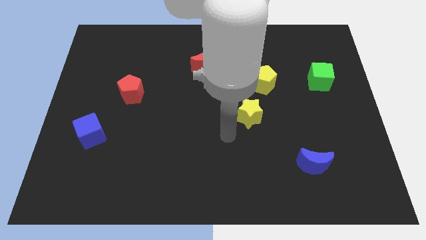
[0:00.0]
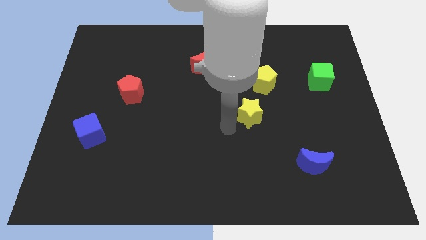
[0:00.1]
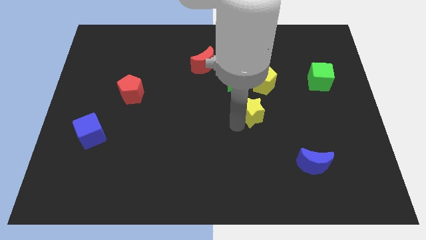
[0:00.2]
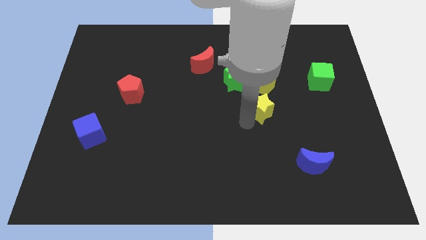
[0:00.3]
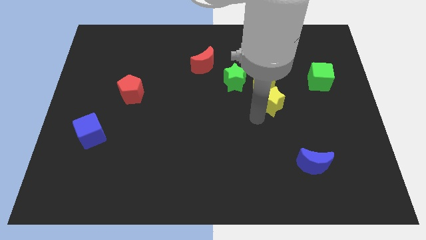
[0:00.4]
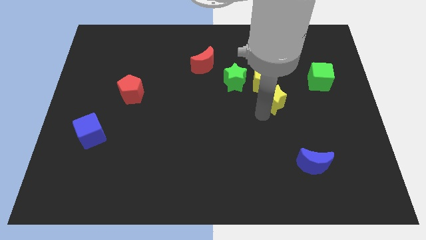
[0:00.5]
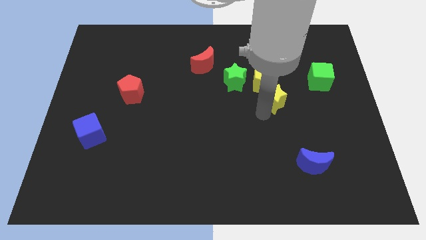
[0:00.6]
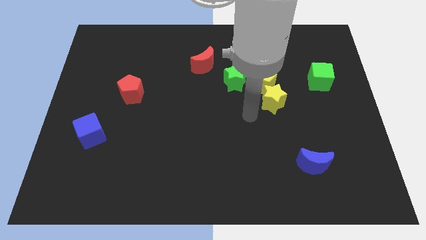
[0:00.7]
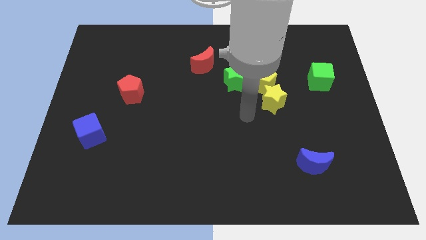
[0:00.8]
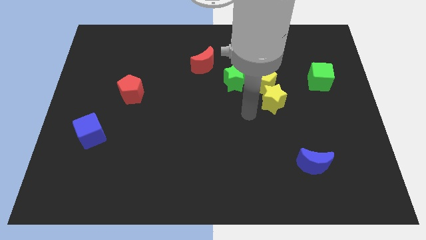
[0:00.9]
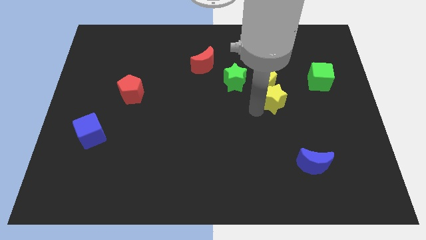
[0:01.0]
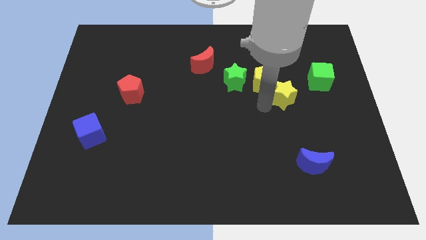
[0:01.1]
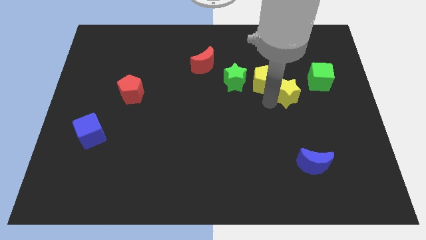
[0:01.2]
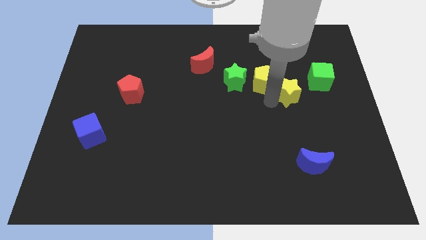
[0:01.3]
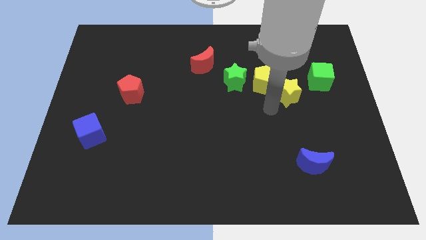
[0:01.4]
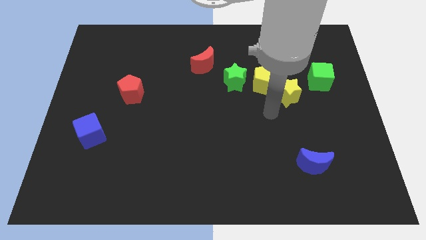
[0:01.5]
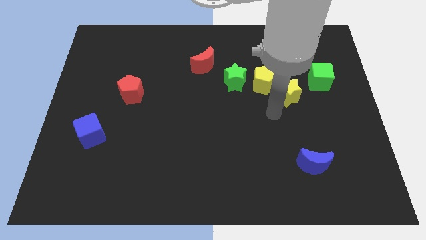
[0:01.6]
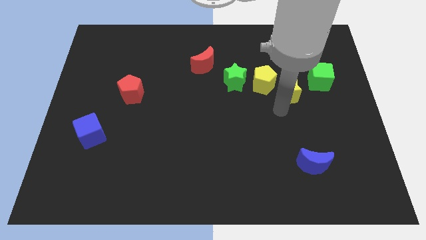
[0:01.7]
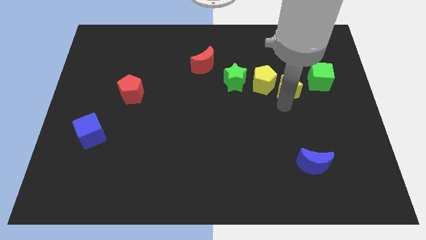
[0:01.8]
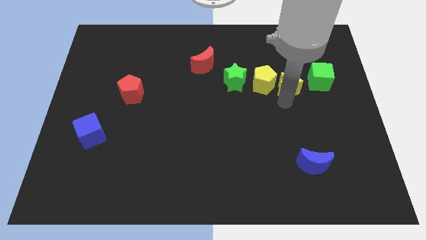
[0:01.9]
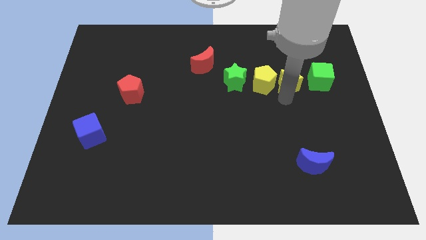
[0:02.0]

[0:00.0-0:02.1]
place the yellow star in between the yellow pentagon and the green cube

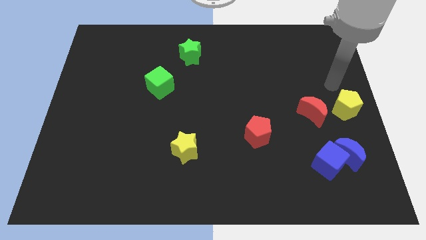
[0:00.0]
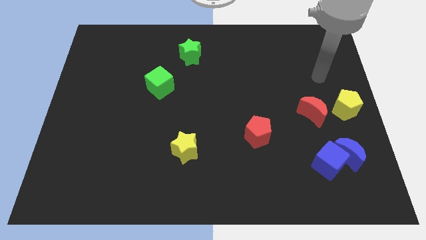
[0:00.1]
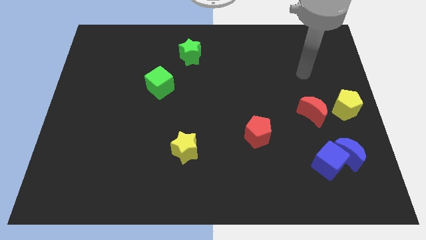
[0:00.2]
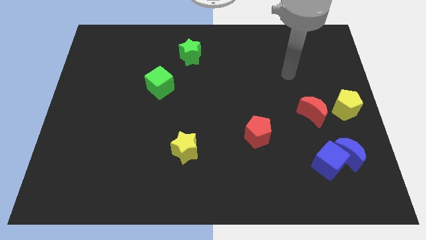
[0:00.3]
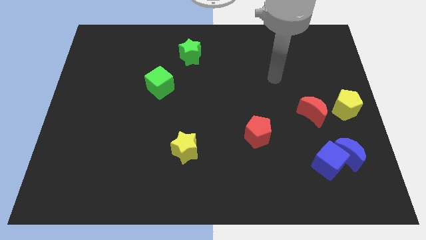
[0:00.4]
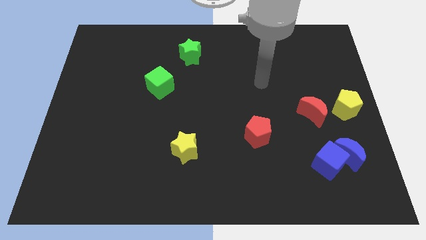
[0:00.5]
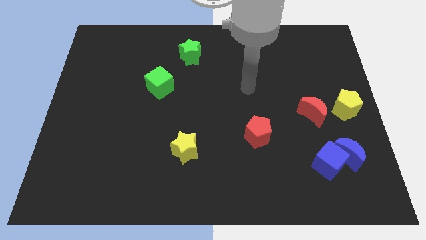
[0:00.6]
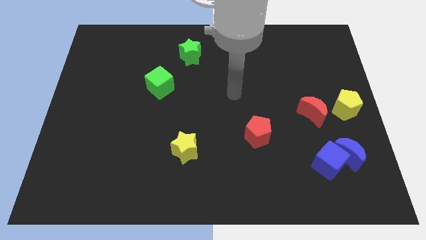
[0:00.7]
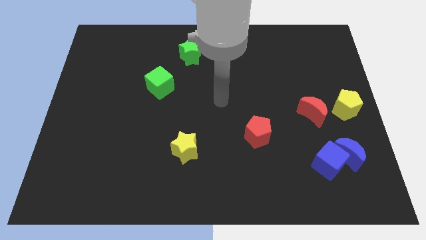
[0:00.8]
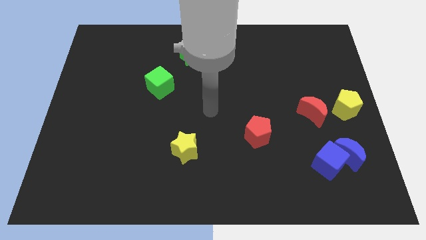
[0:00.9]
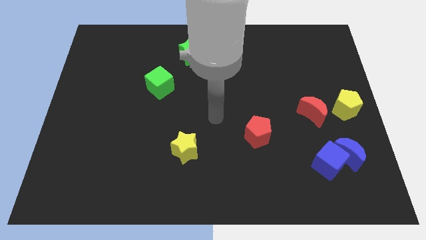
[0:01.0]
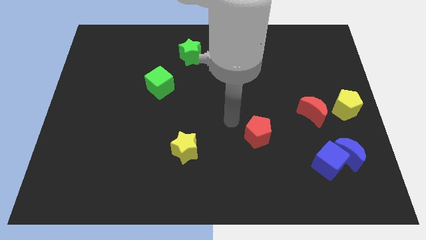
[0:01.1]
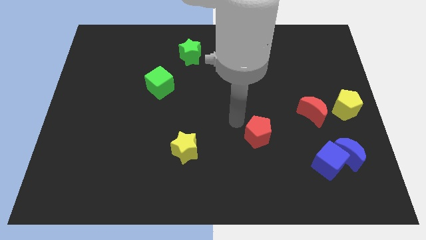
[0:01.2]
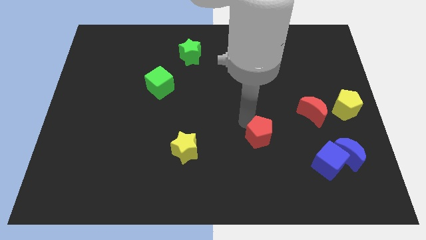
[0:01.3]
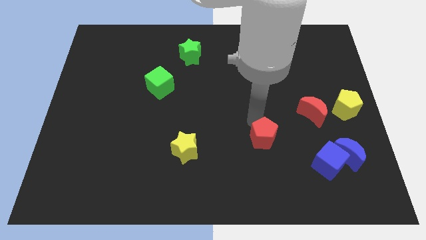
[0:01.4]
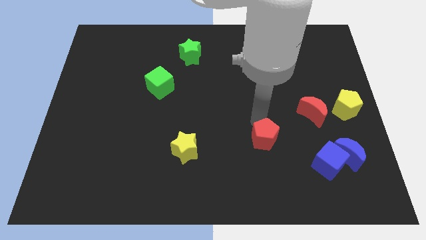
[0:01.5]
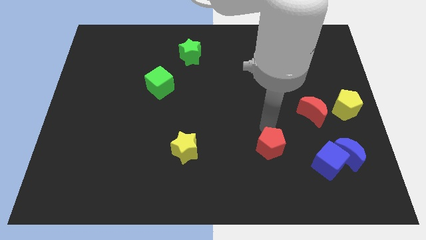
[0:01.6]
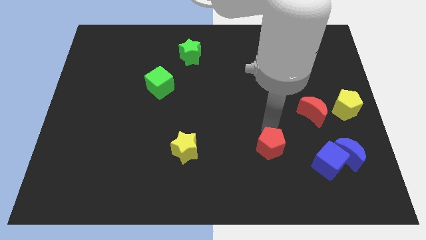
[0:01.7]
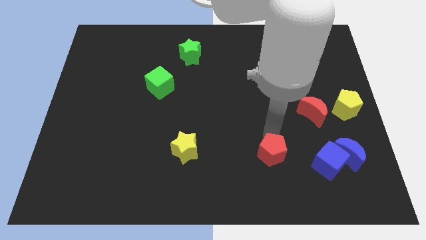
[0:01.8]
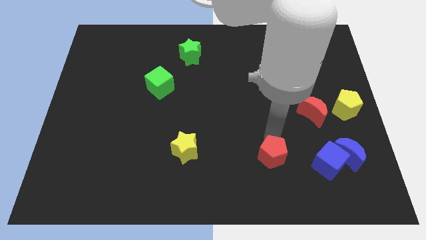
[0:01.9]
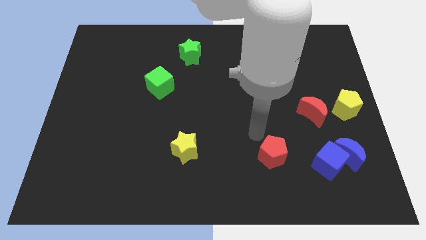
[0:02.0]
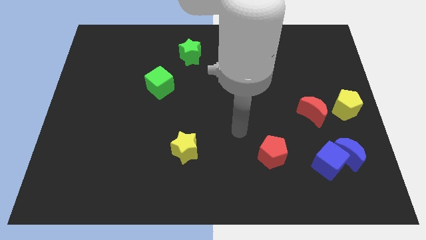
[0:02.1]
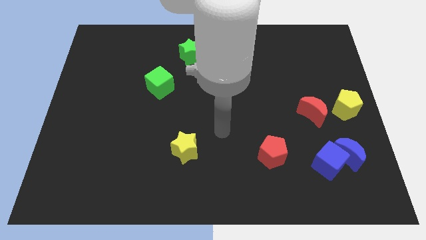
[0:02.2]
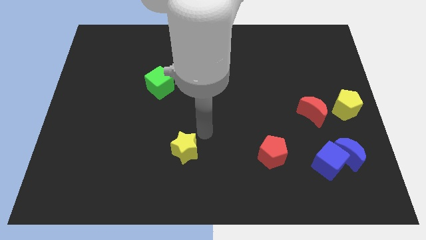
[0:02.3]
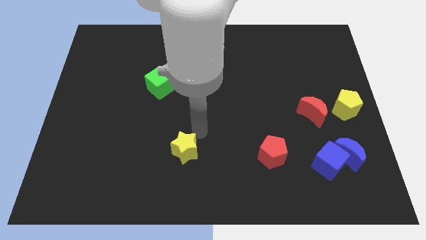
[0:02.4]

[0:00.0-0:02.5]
slightly move the red pentagon towards the bottom of the board

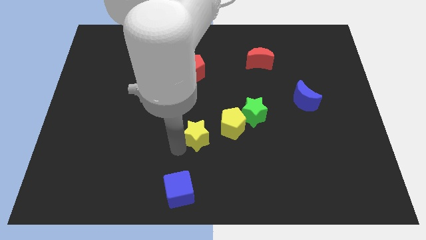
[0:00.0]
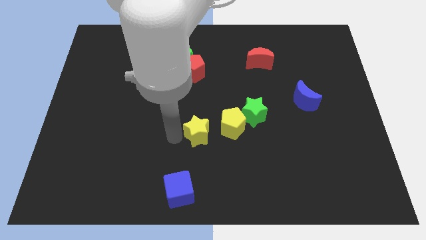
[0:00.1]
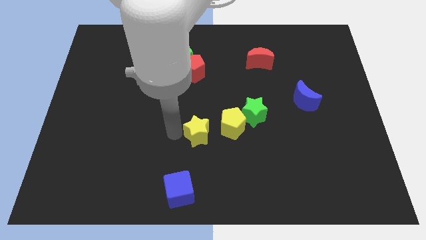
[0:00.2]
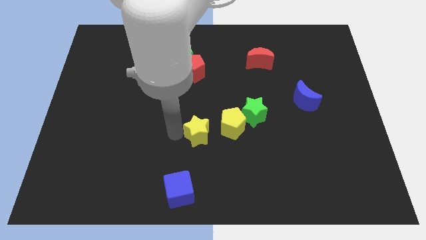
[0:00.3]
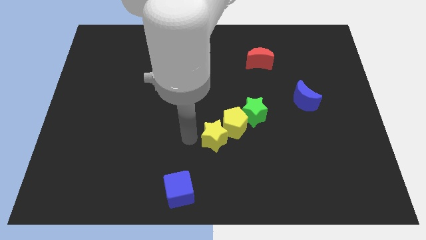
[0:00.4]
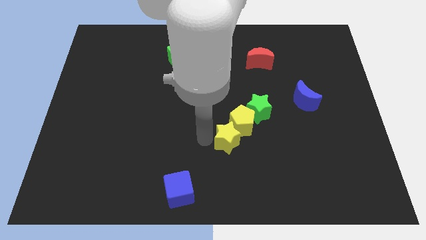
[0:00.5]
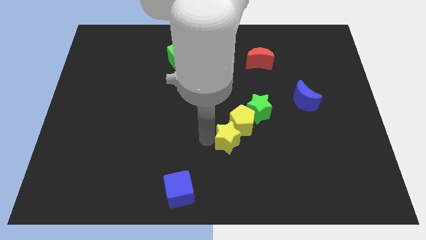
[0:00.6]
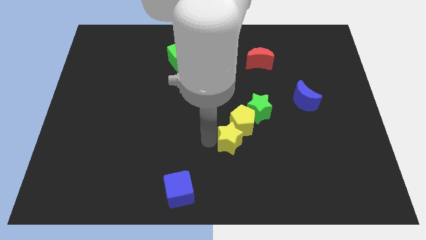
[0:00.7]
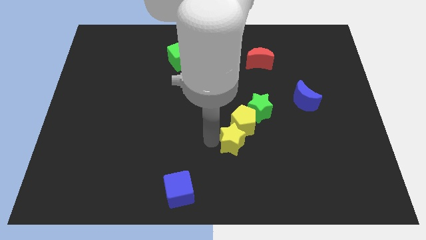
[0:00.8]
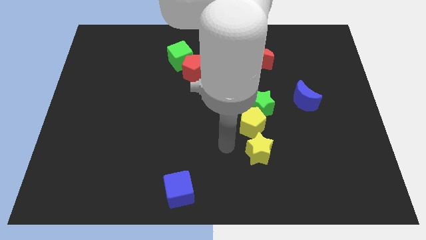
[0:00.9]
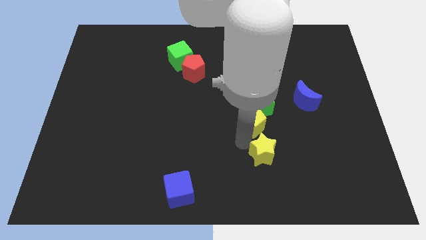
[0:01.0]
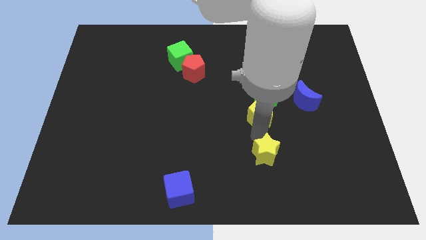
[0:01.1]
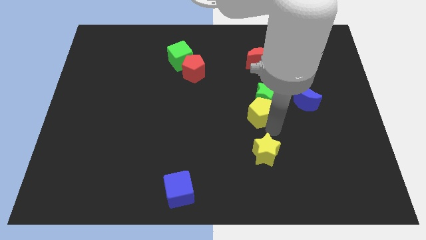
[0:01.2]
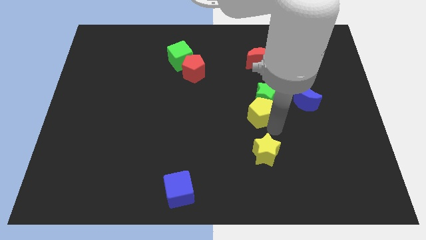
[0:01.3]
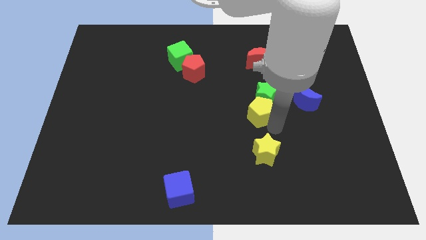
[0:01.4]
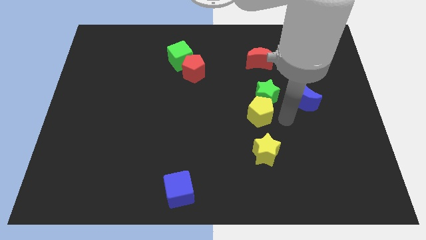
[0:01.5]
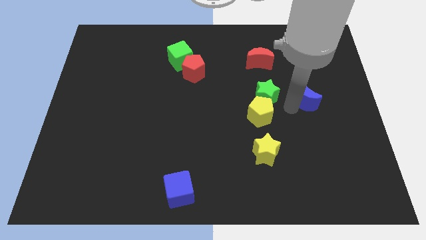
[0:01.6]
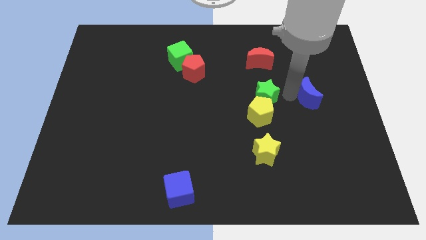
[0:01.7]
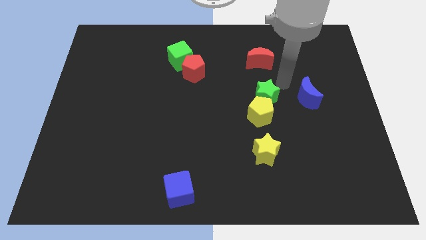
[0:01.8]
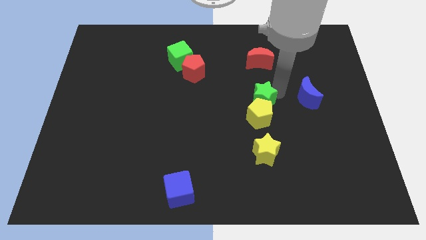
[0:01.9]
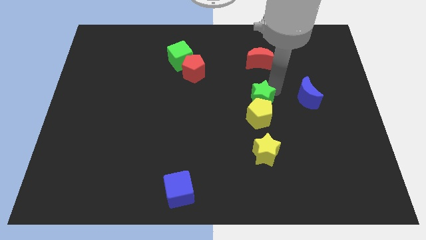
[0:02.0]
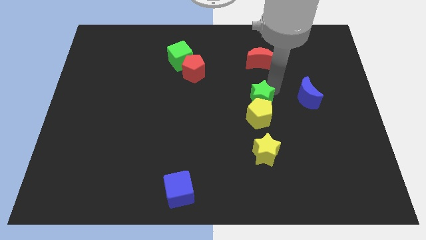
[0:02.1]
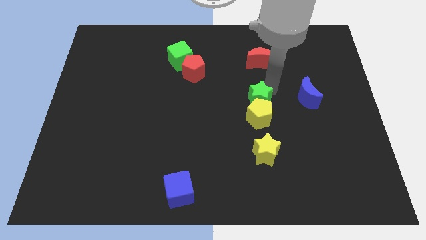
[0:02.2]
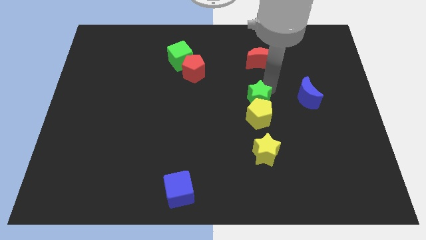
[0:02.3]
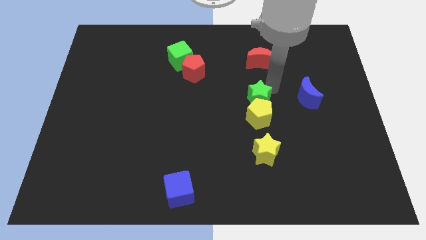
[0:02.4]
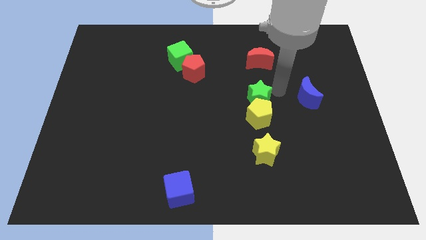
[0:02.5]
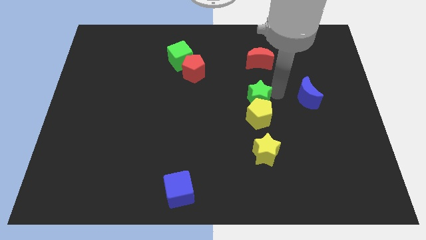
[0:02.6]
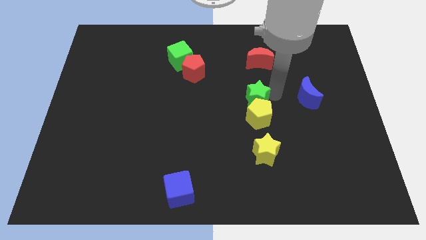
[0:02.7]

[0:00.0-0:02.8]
move your arm close to the green star

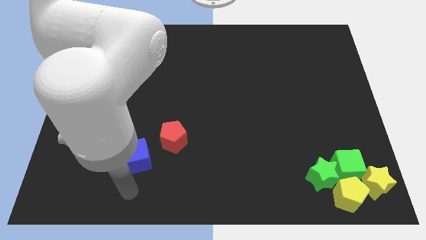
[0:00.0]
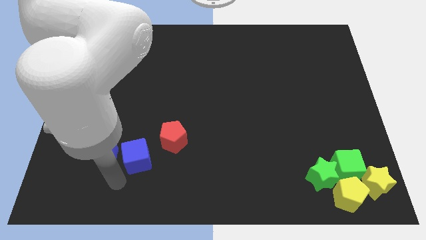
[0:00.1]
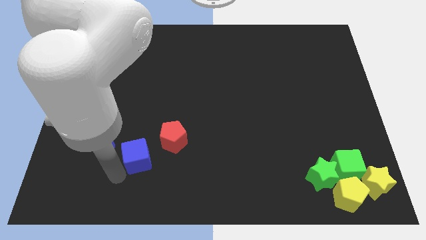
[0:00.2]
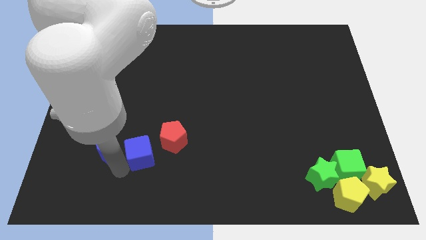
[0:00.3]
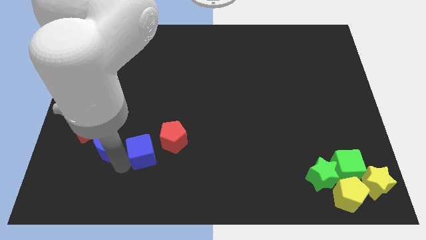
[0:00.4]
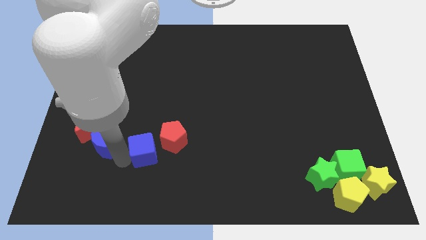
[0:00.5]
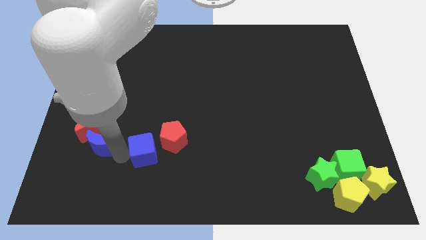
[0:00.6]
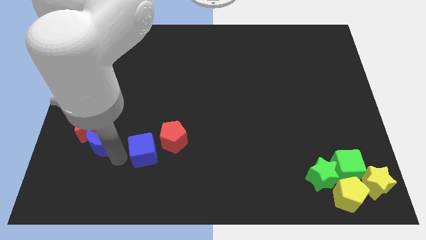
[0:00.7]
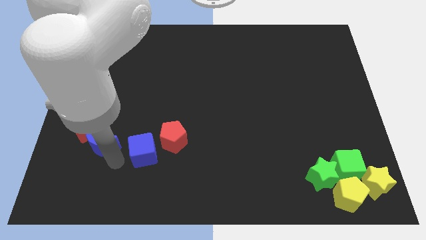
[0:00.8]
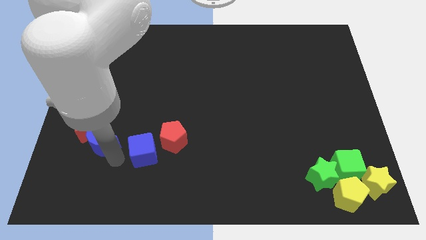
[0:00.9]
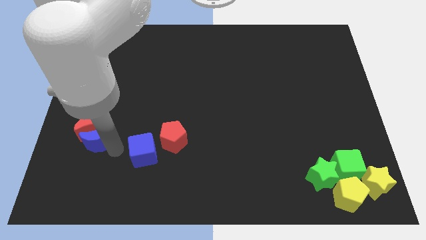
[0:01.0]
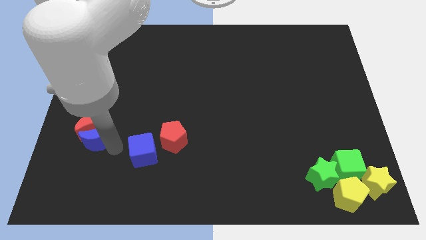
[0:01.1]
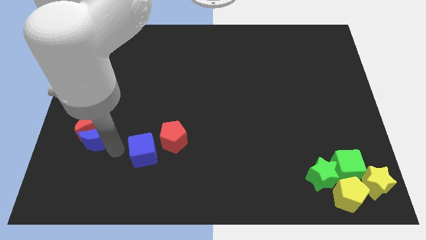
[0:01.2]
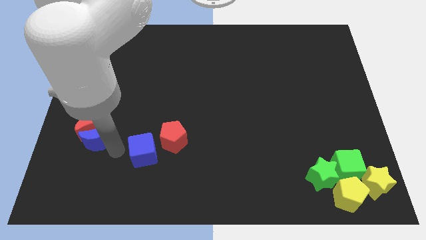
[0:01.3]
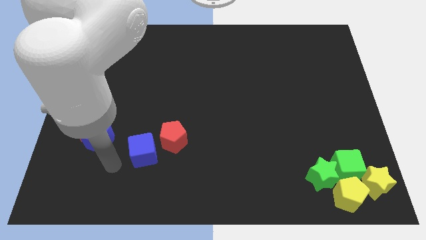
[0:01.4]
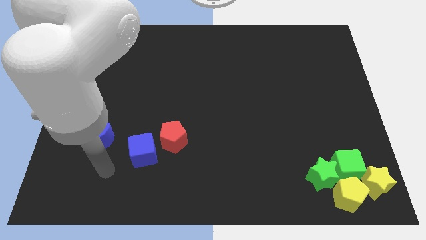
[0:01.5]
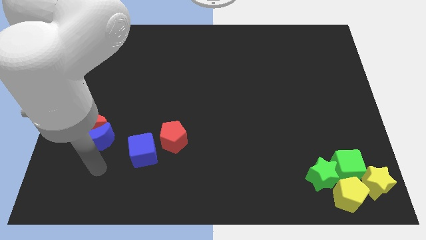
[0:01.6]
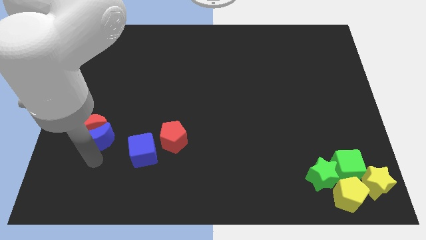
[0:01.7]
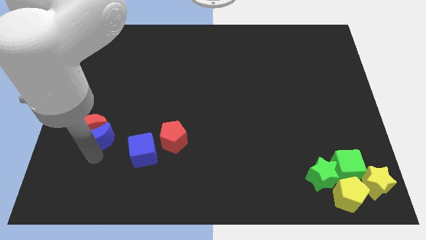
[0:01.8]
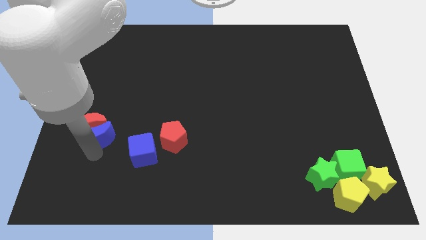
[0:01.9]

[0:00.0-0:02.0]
push the blue moon below into the red moon
